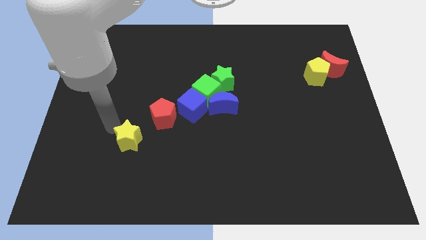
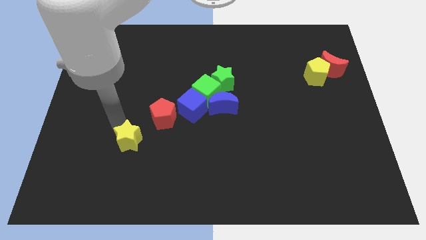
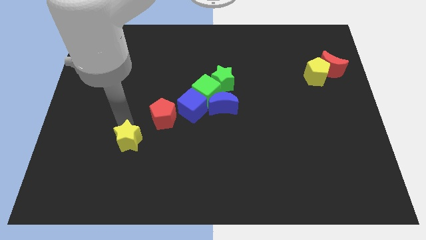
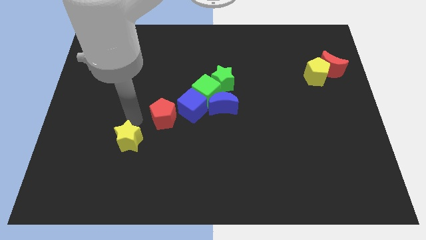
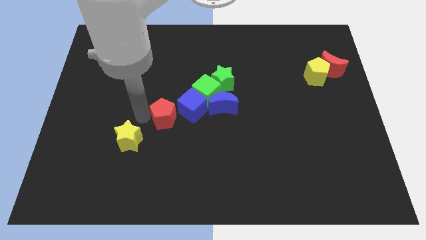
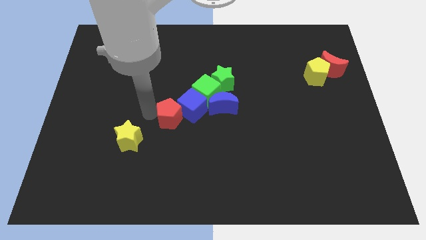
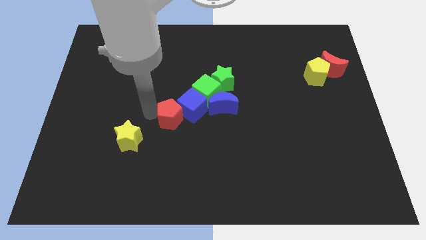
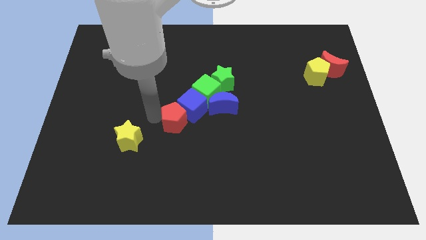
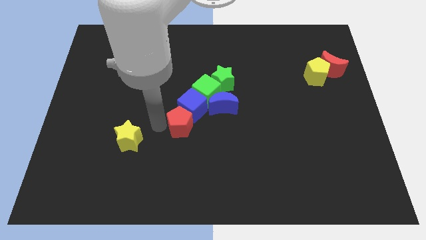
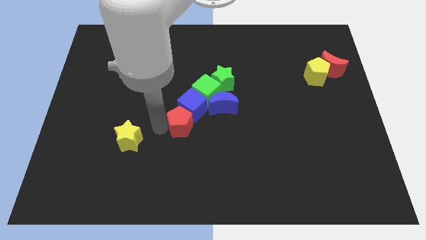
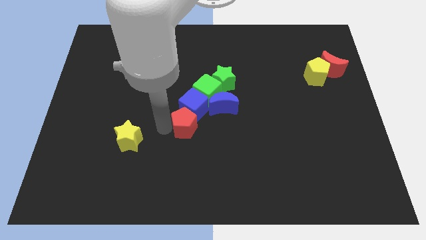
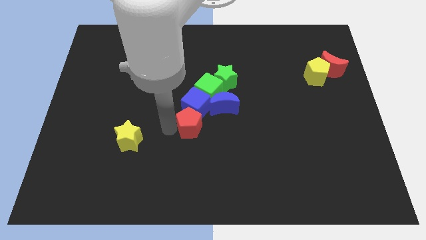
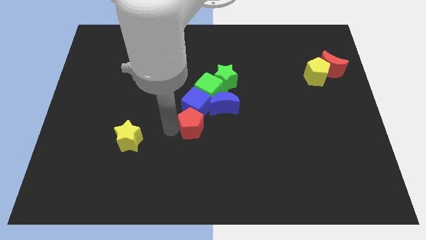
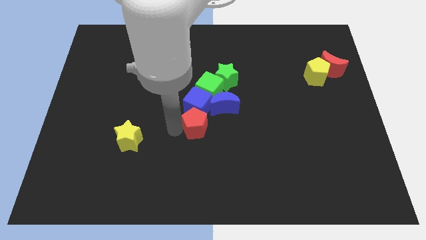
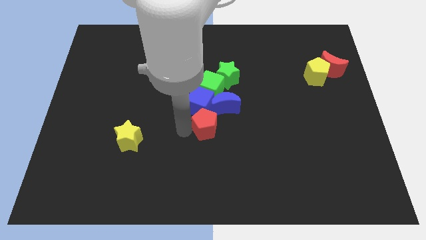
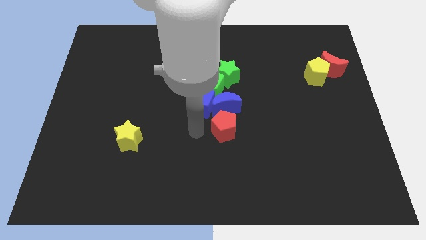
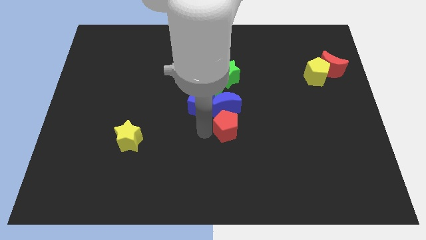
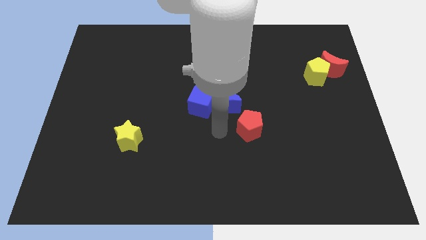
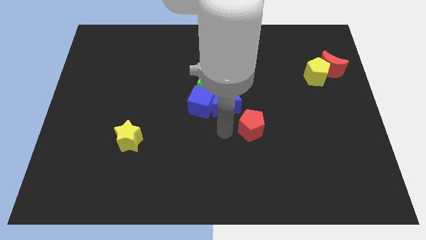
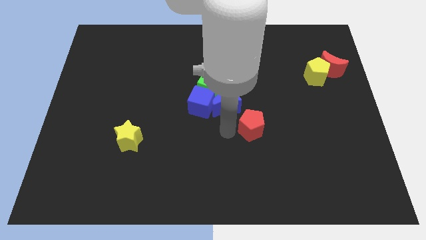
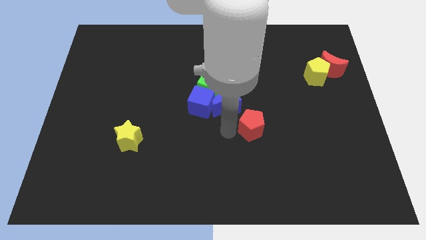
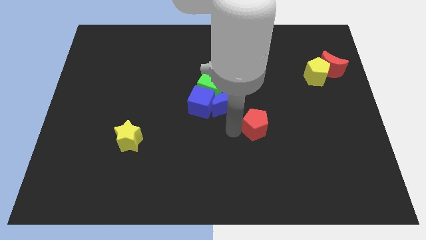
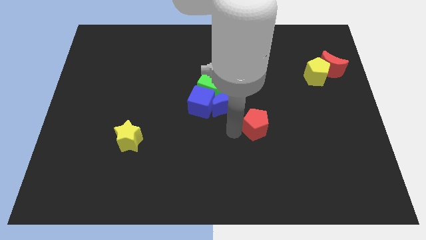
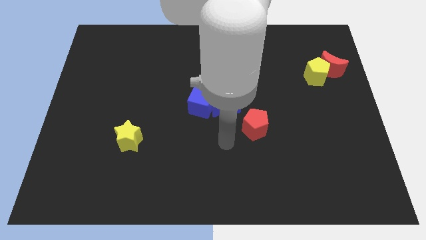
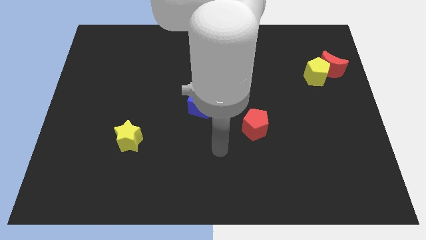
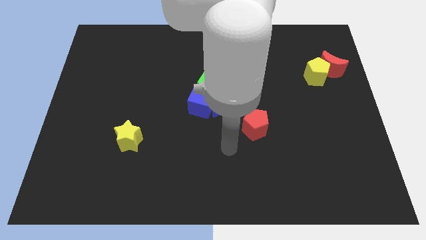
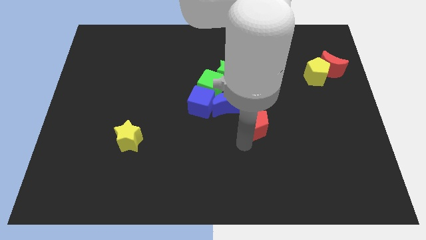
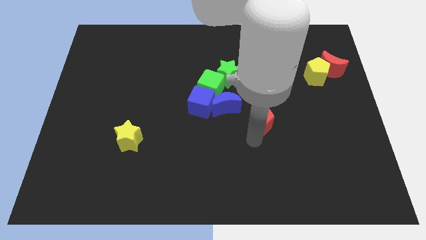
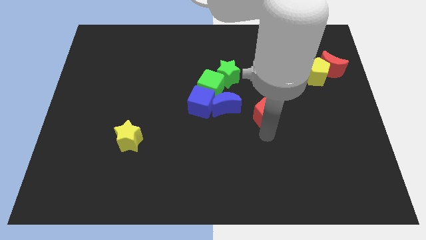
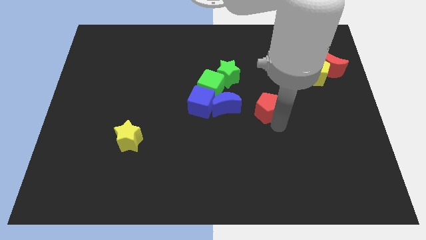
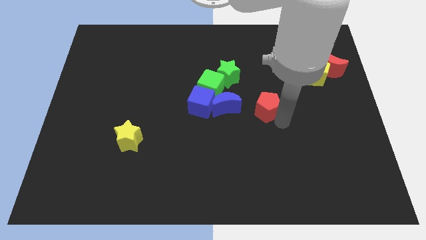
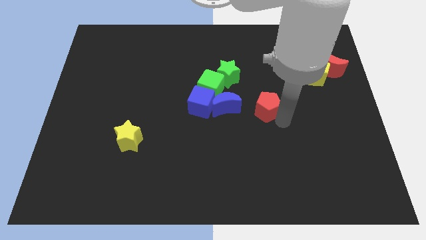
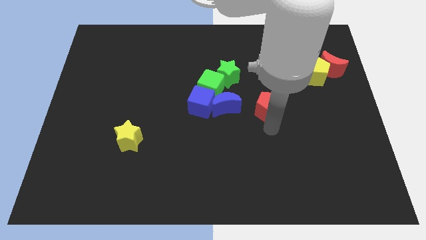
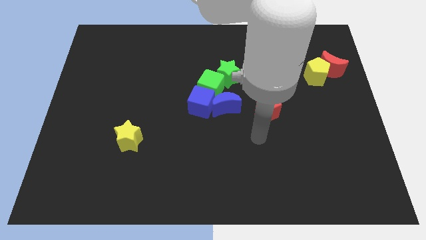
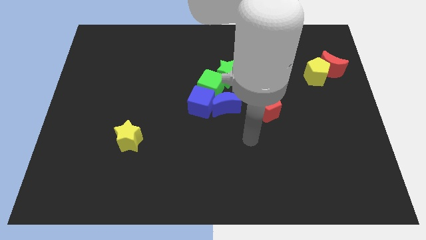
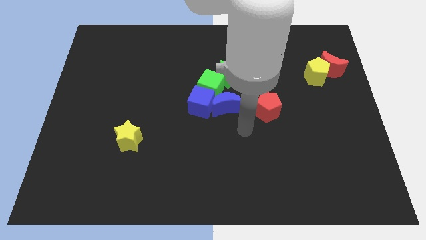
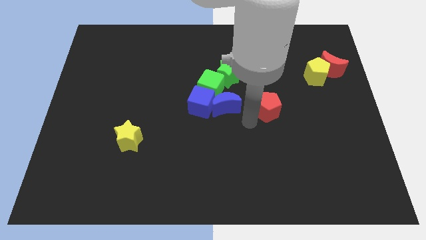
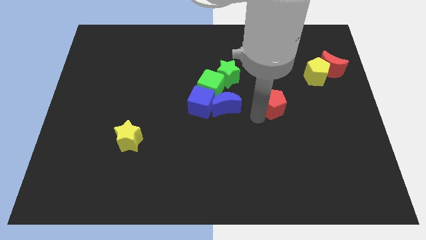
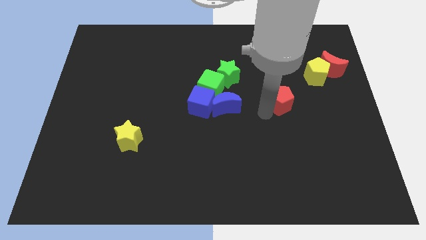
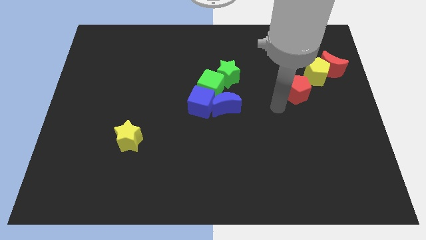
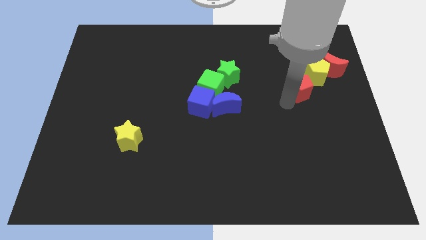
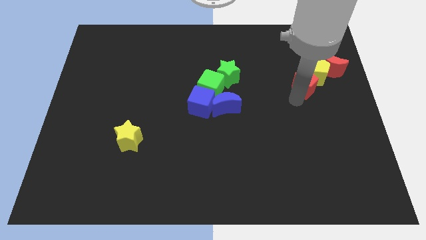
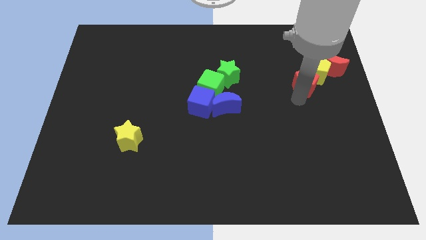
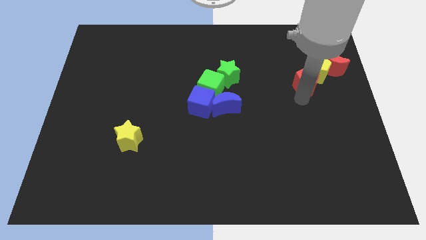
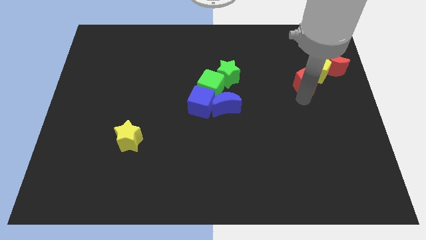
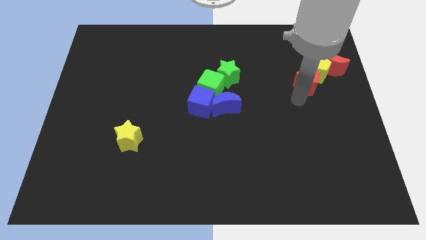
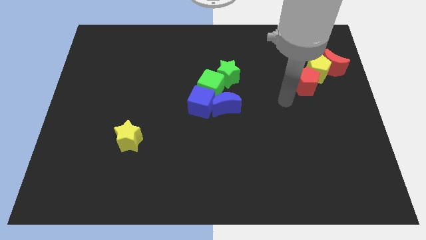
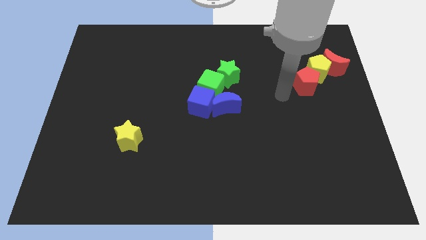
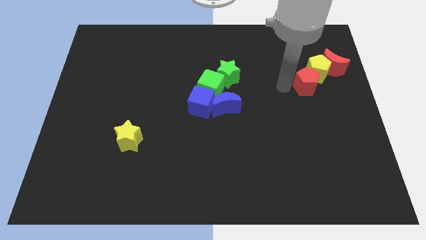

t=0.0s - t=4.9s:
move the red pentagon into the yellow pentagon

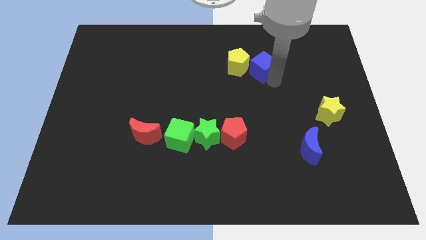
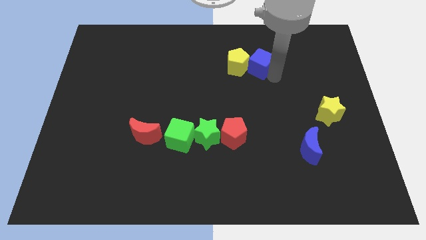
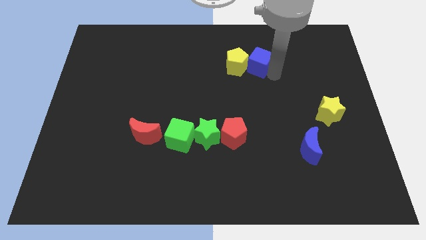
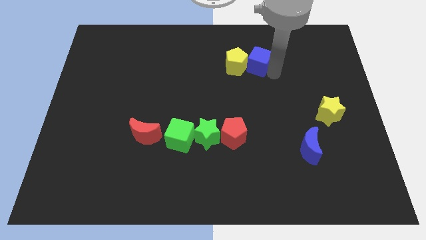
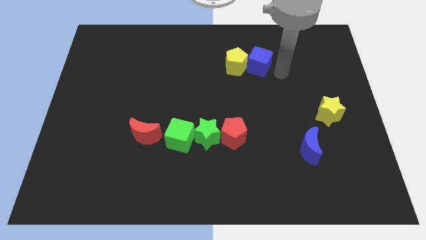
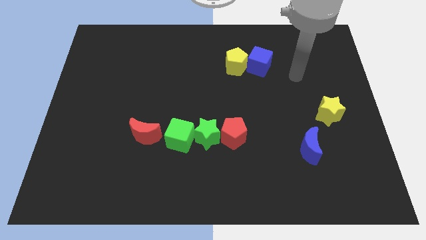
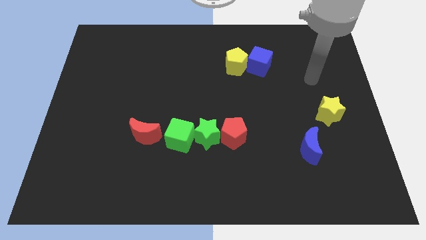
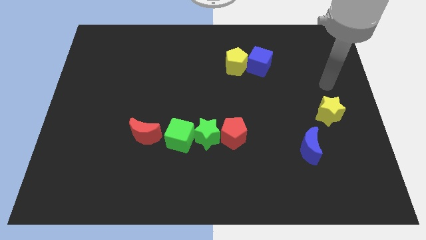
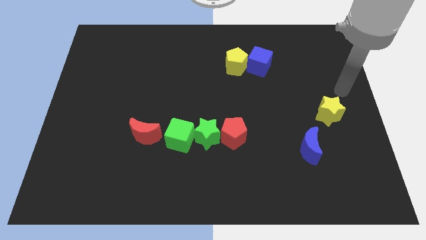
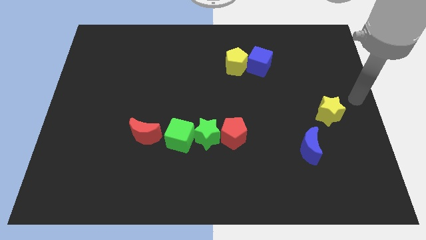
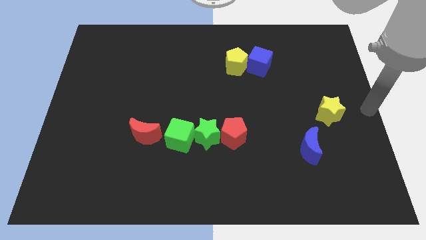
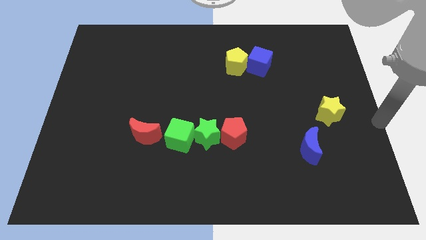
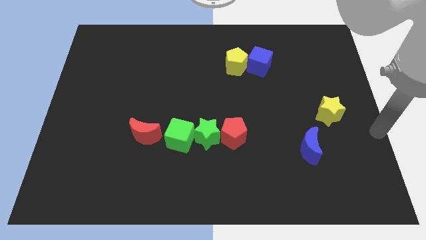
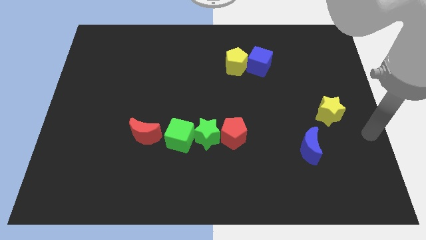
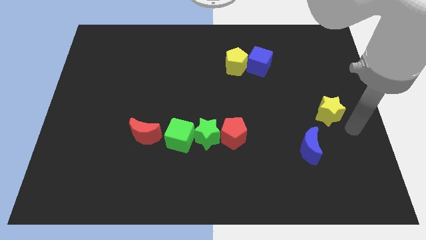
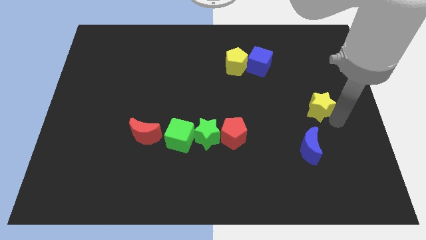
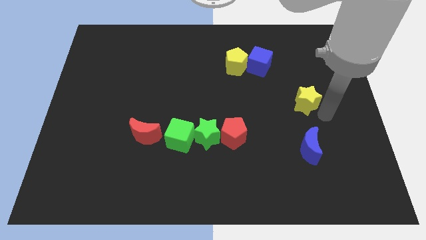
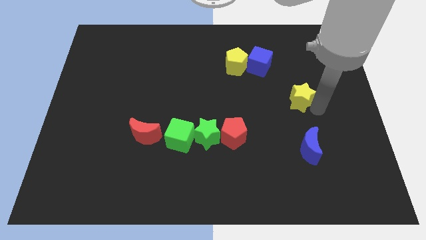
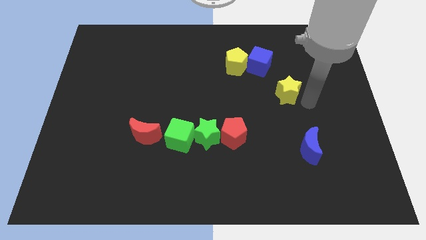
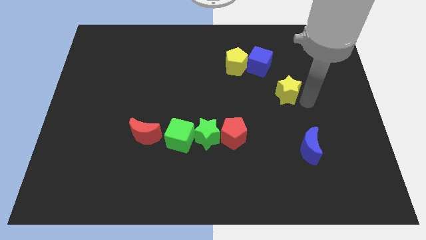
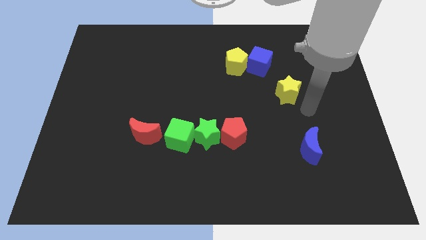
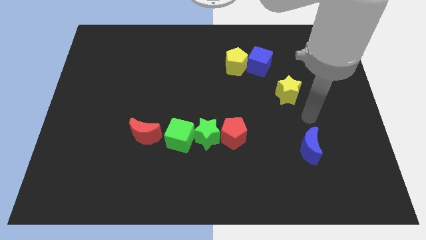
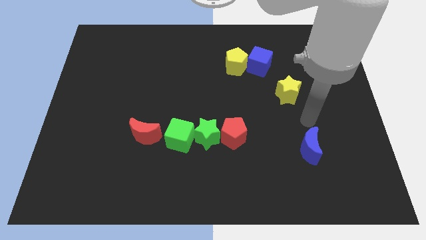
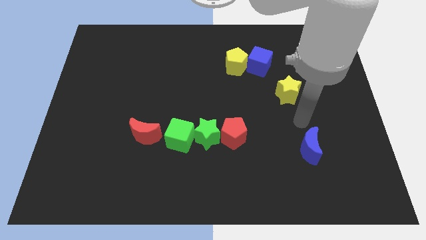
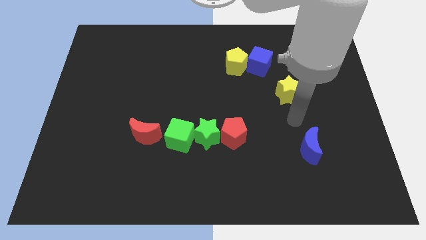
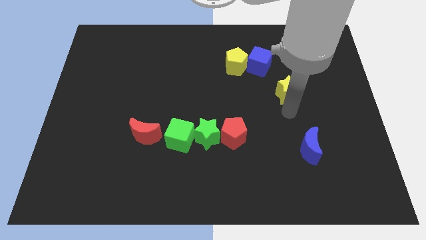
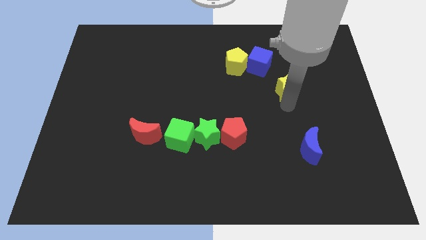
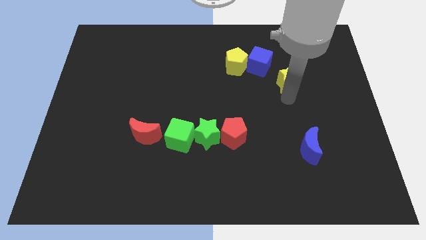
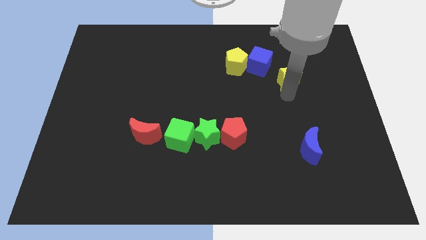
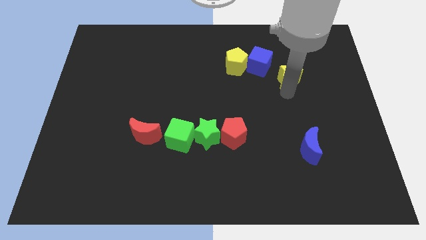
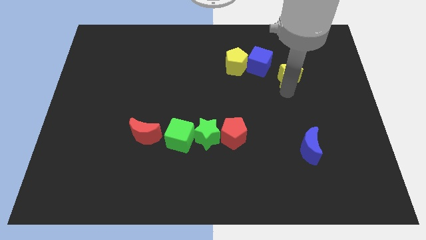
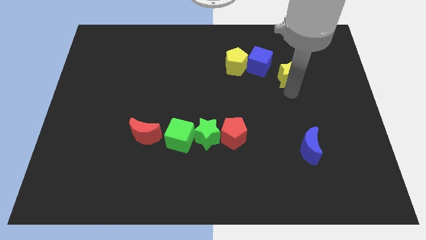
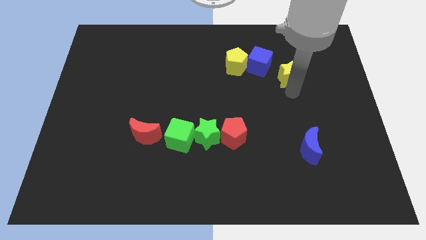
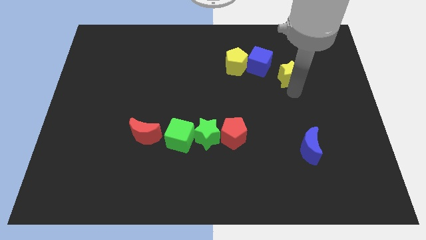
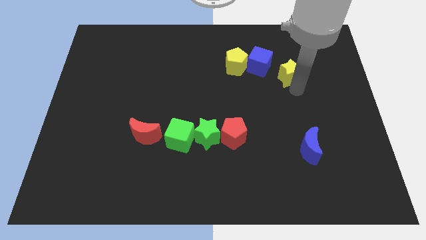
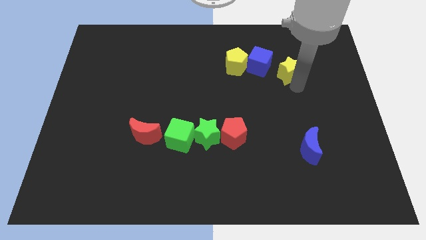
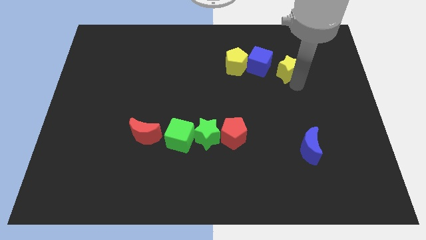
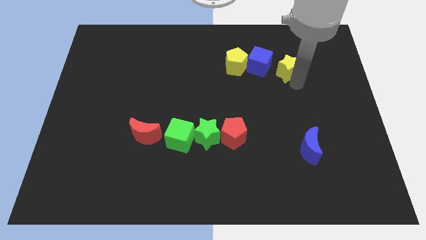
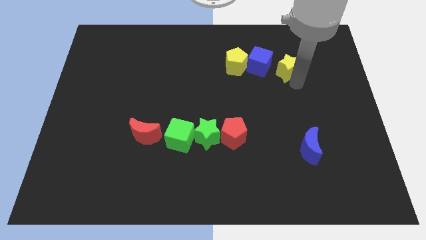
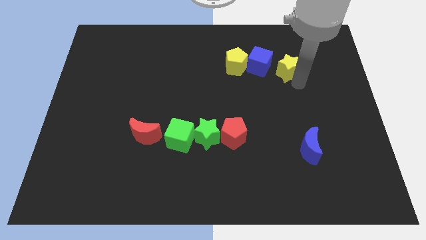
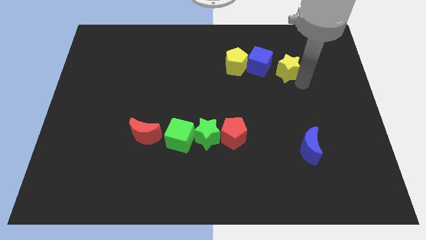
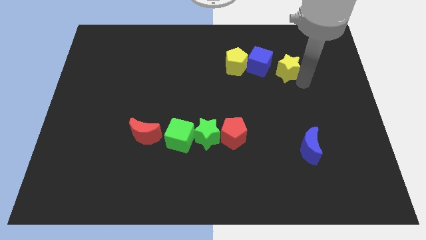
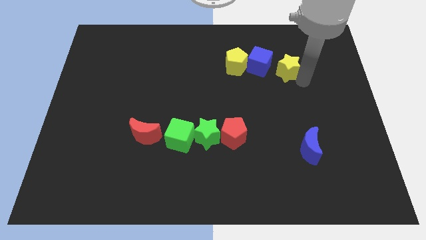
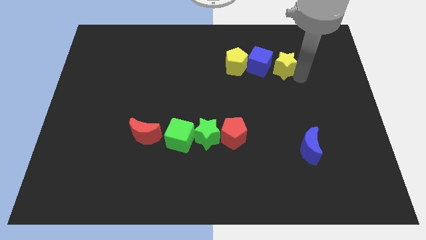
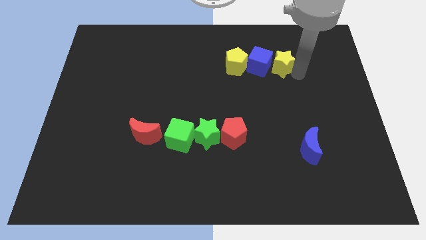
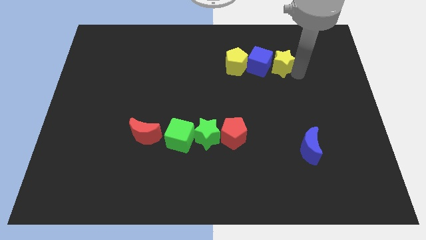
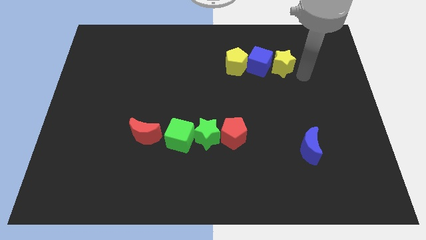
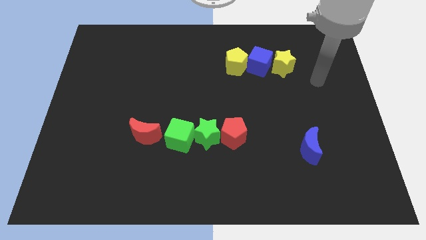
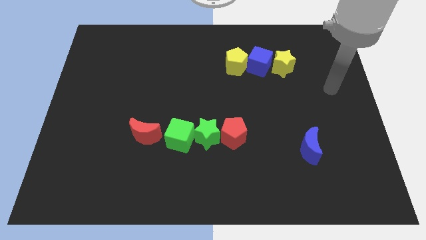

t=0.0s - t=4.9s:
push the yellow star to the right of the blue cube
